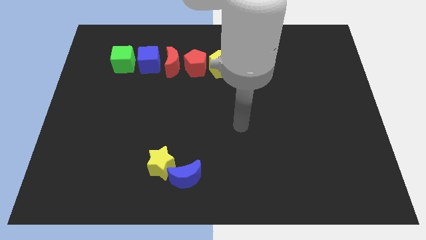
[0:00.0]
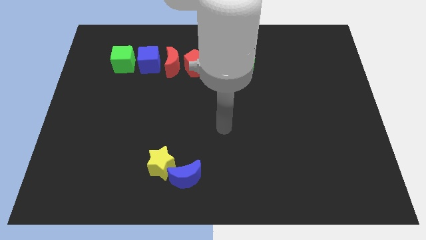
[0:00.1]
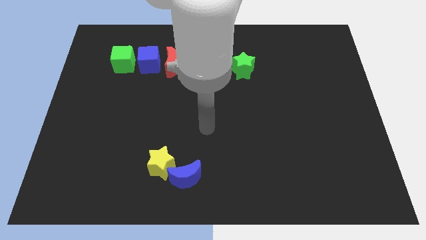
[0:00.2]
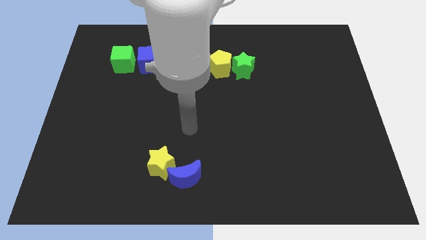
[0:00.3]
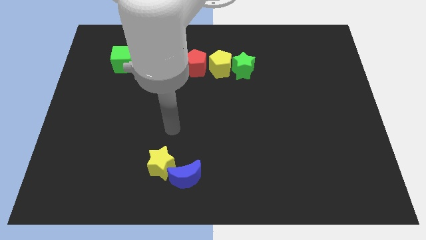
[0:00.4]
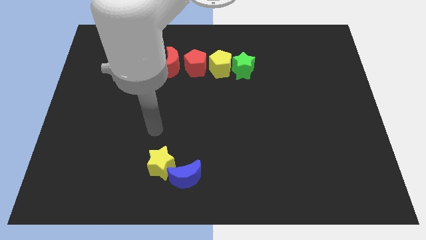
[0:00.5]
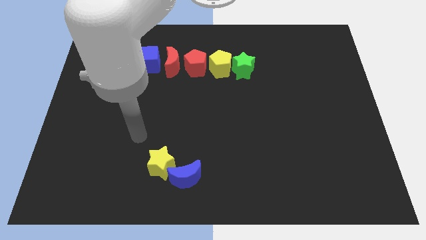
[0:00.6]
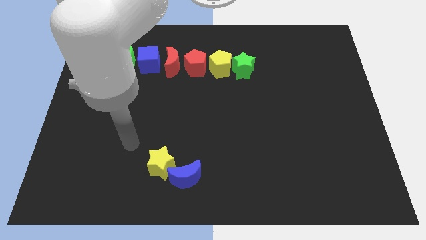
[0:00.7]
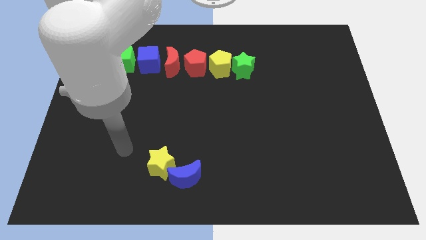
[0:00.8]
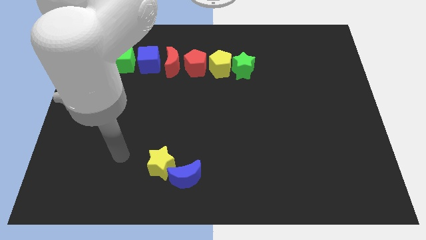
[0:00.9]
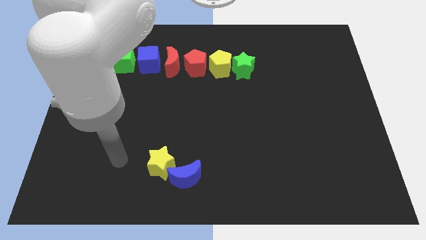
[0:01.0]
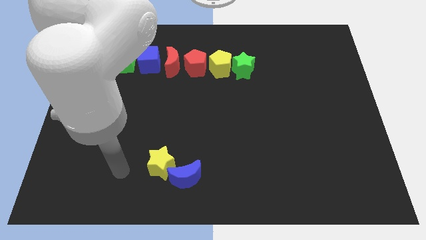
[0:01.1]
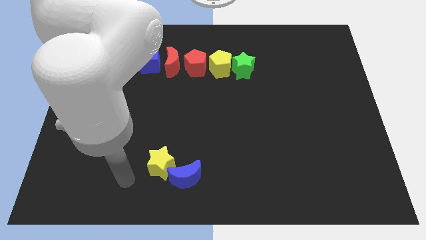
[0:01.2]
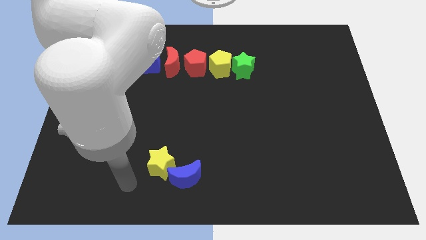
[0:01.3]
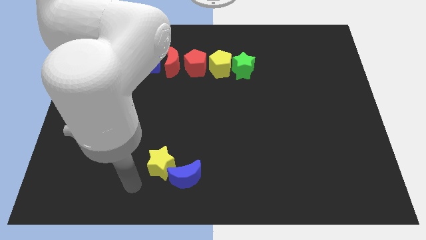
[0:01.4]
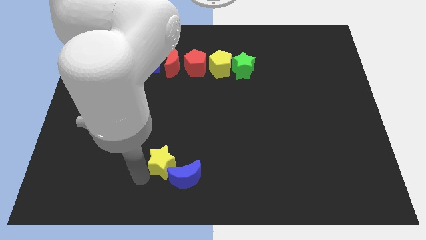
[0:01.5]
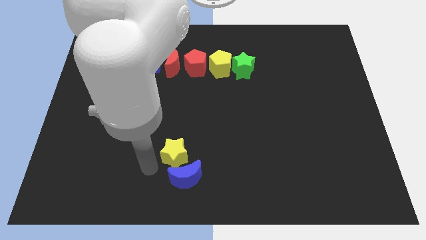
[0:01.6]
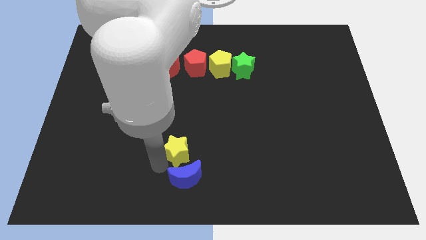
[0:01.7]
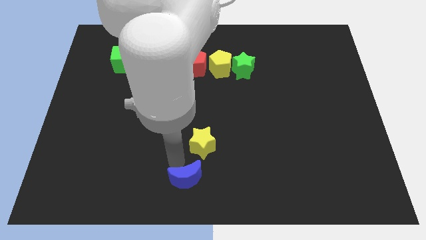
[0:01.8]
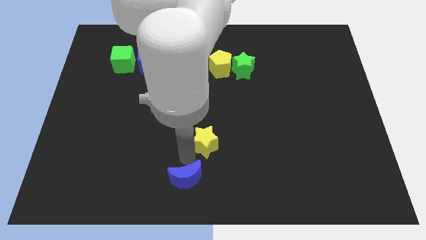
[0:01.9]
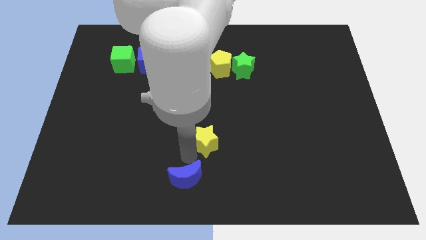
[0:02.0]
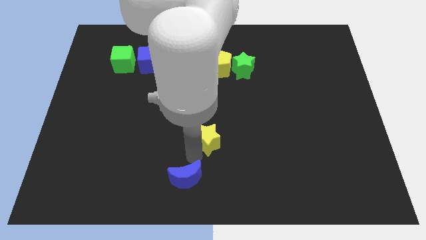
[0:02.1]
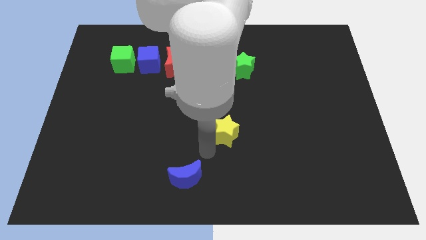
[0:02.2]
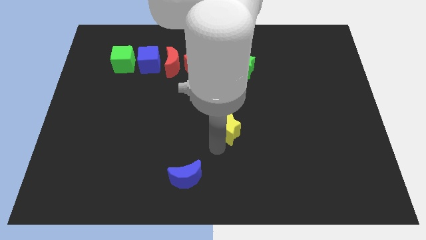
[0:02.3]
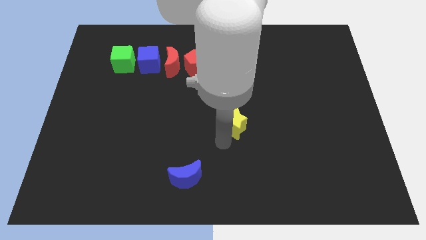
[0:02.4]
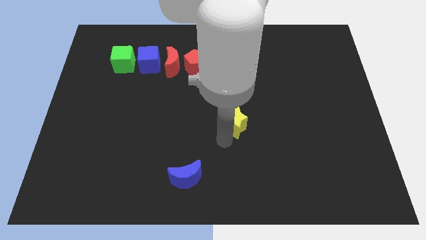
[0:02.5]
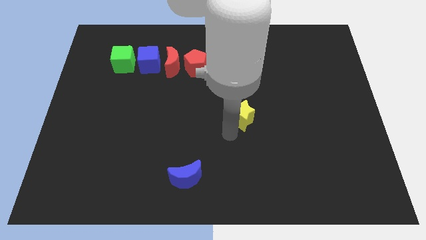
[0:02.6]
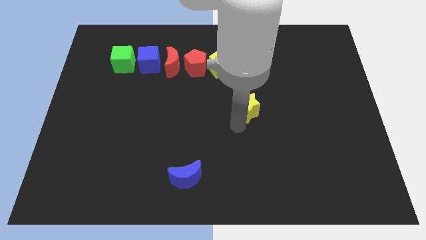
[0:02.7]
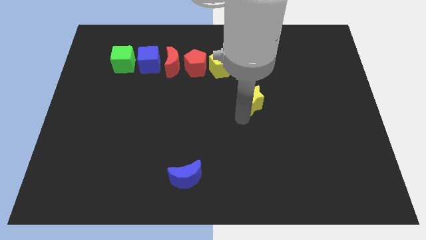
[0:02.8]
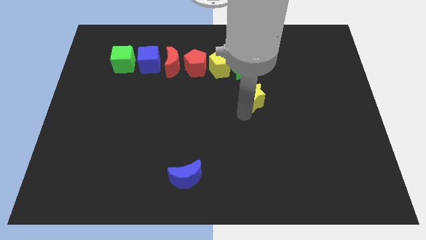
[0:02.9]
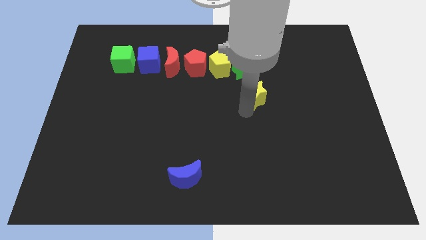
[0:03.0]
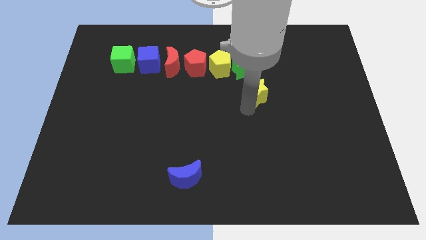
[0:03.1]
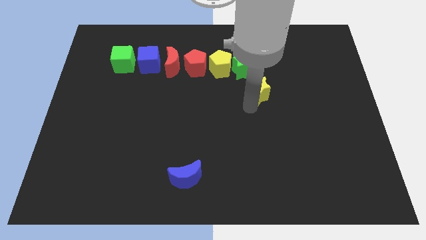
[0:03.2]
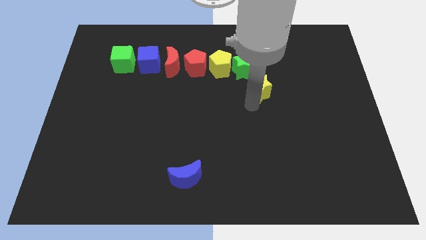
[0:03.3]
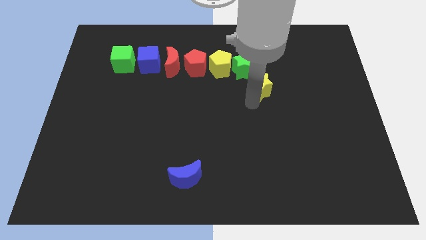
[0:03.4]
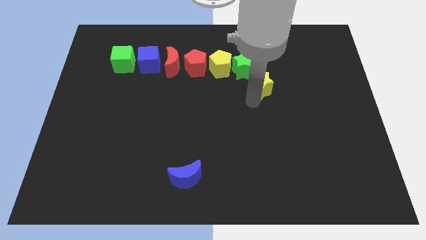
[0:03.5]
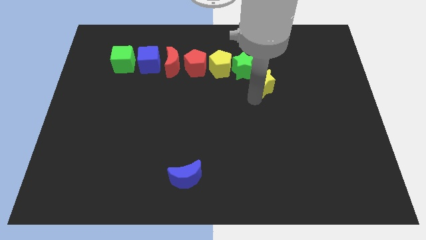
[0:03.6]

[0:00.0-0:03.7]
place the yellow star to the right bottom of the green star

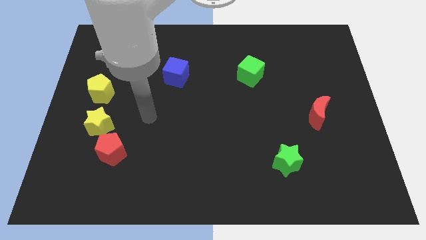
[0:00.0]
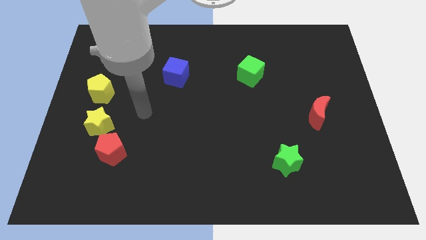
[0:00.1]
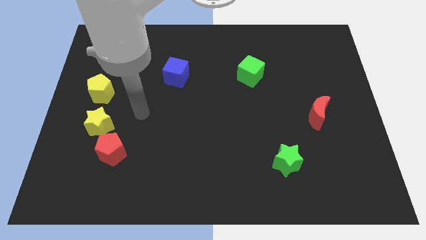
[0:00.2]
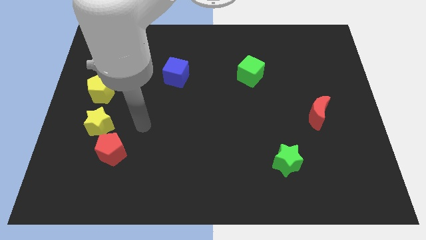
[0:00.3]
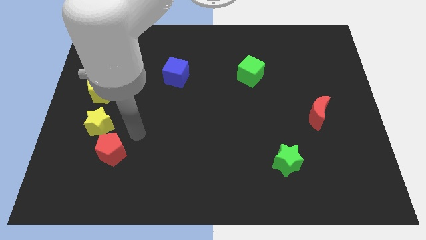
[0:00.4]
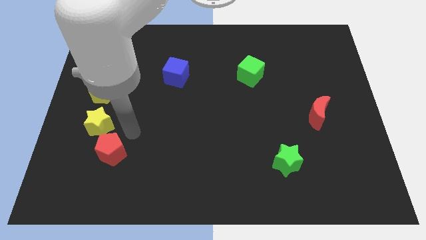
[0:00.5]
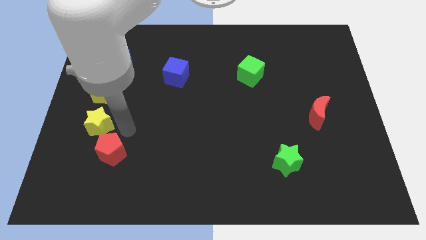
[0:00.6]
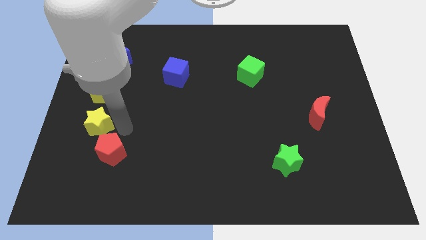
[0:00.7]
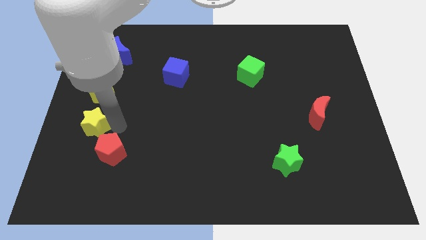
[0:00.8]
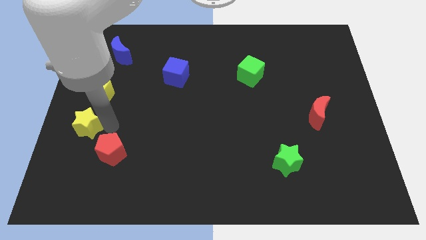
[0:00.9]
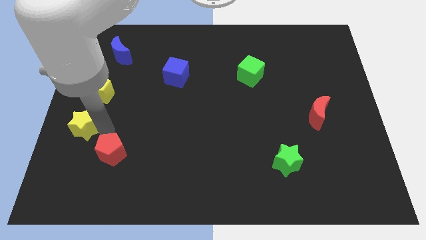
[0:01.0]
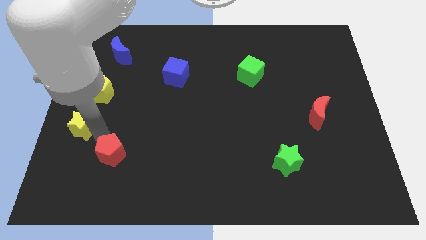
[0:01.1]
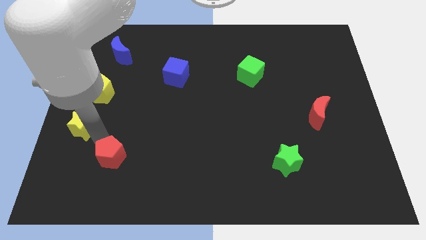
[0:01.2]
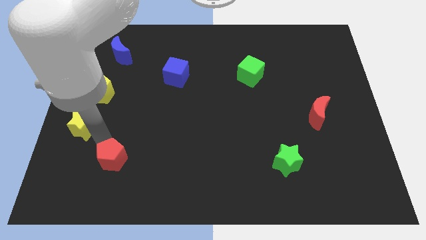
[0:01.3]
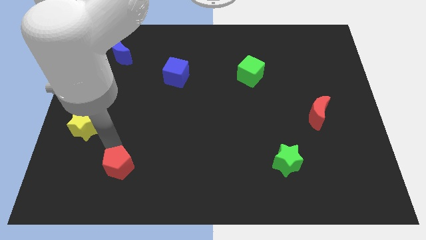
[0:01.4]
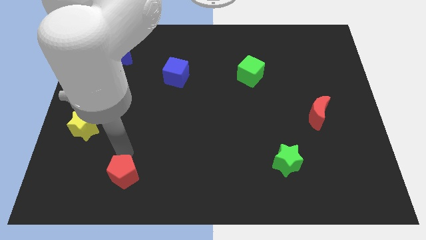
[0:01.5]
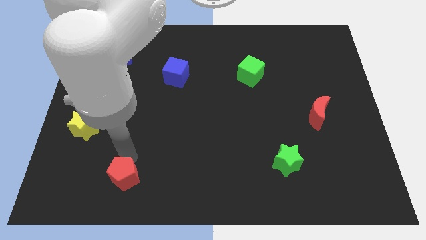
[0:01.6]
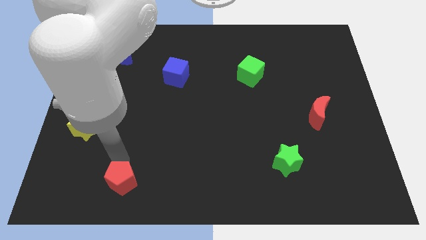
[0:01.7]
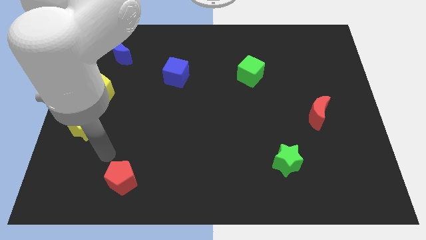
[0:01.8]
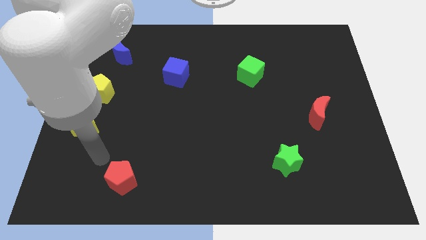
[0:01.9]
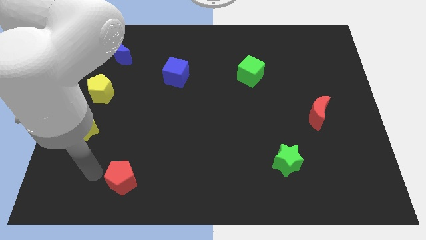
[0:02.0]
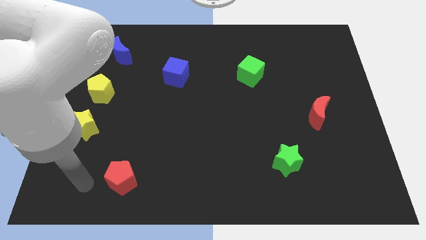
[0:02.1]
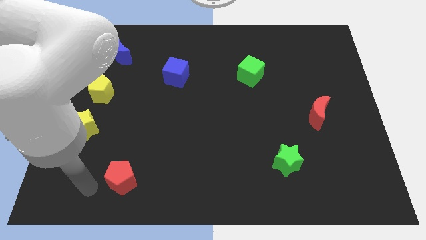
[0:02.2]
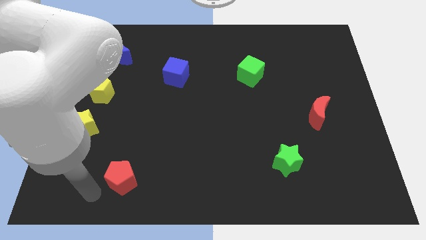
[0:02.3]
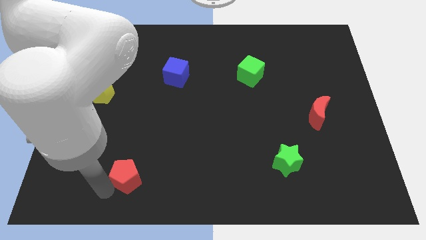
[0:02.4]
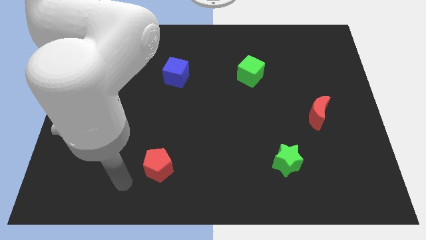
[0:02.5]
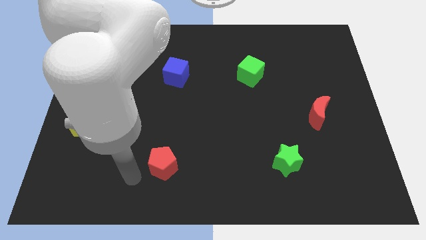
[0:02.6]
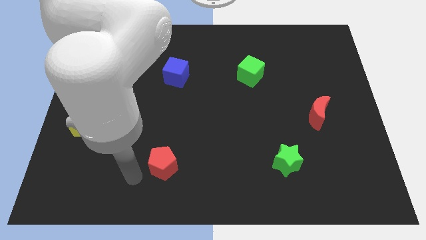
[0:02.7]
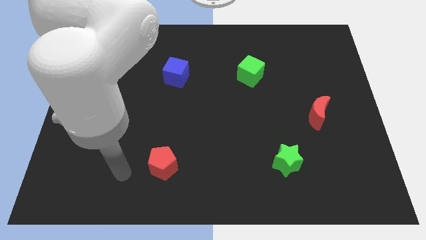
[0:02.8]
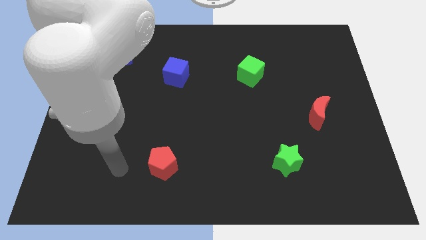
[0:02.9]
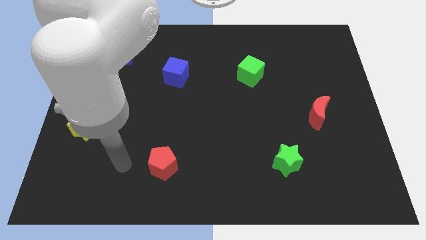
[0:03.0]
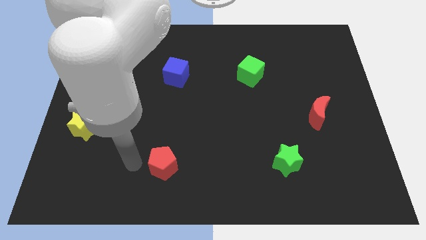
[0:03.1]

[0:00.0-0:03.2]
separate the red pentagon from the yellow star

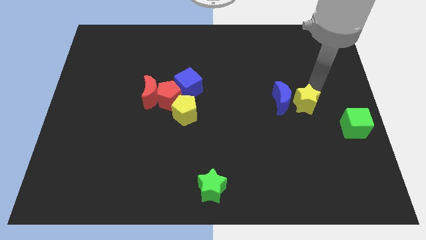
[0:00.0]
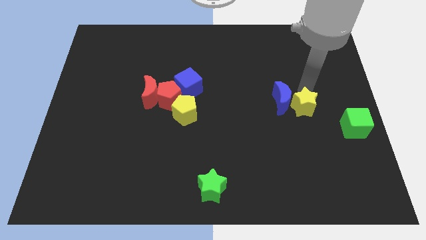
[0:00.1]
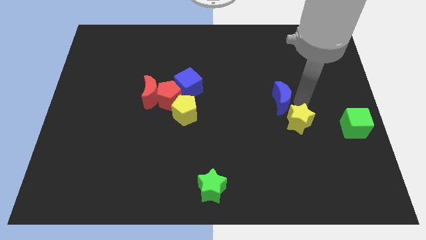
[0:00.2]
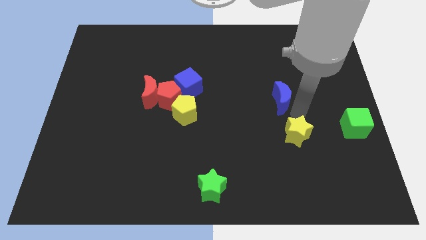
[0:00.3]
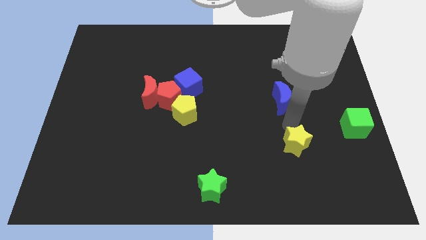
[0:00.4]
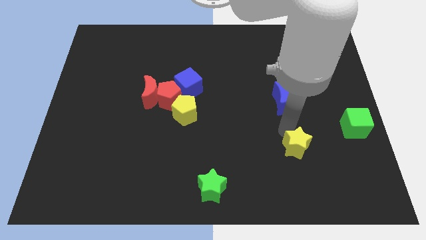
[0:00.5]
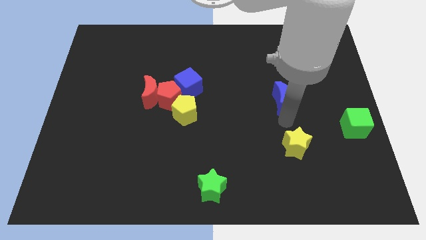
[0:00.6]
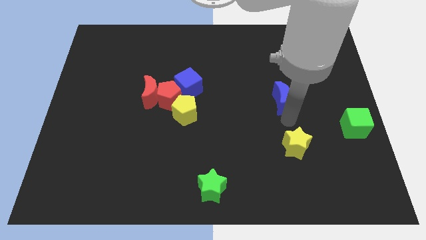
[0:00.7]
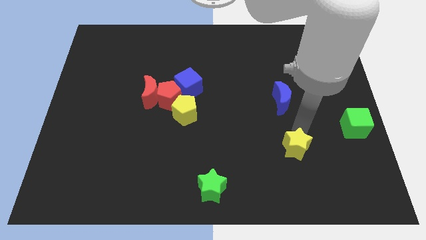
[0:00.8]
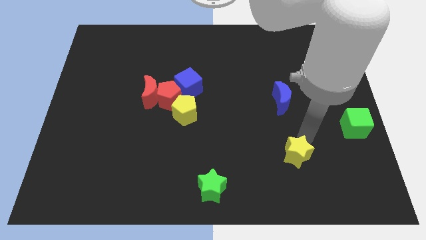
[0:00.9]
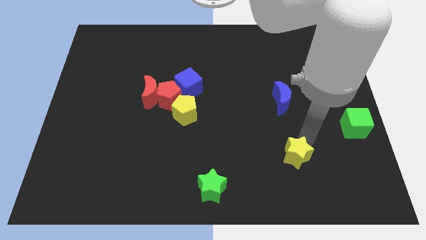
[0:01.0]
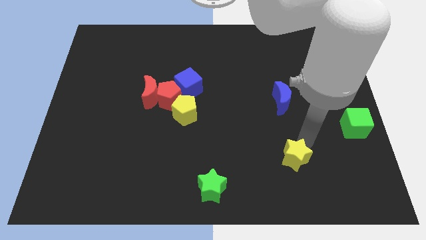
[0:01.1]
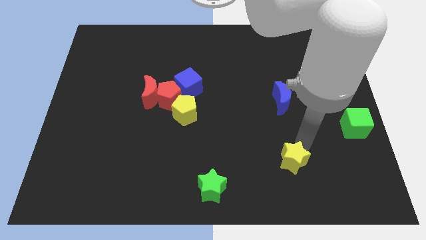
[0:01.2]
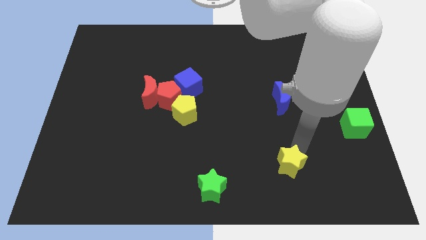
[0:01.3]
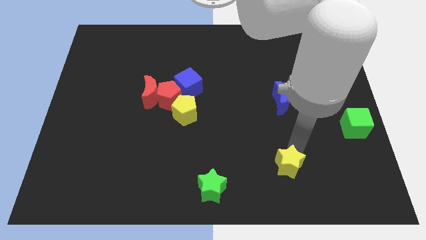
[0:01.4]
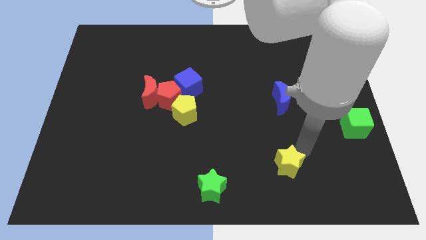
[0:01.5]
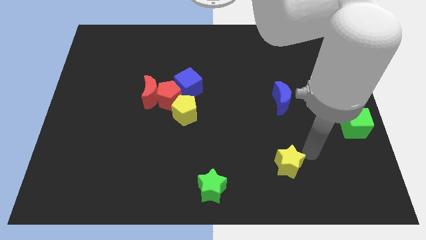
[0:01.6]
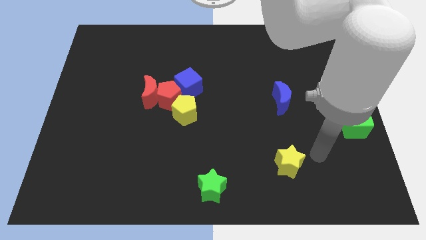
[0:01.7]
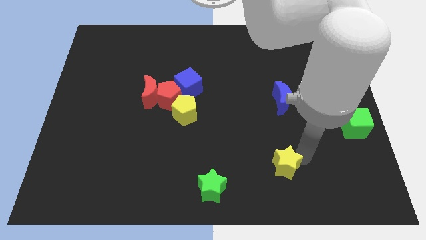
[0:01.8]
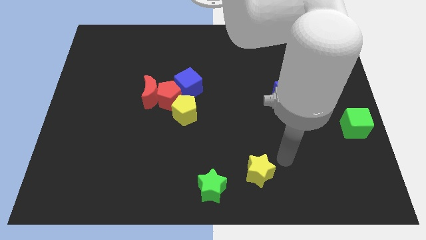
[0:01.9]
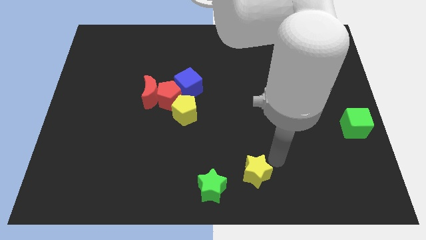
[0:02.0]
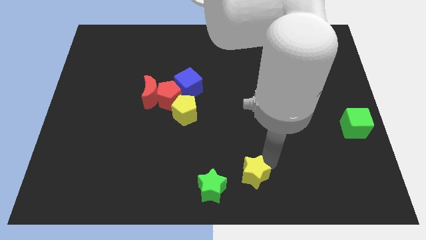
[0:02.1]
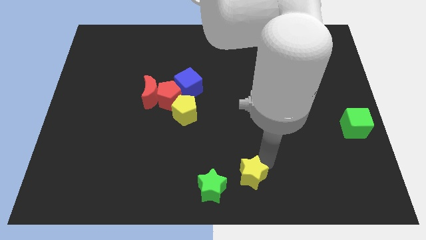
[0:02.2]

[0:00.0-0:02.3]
move the yellow star diagonal towards green star
